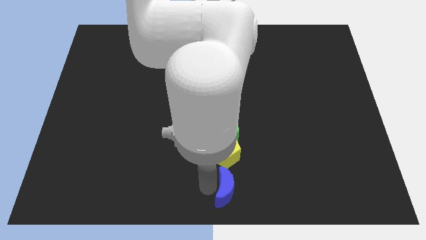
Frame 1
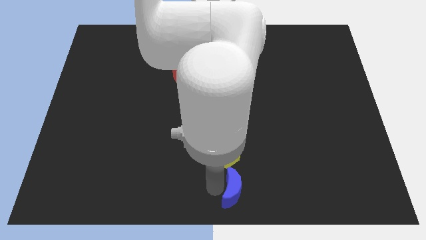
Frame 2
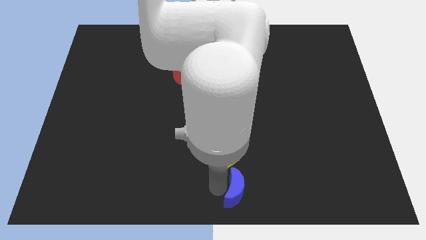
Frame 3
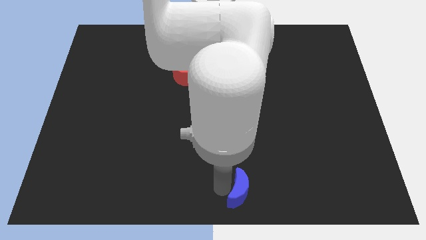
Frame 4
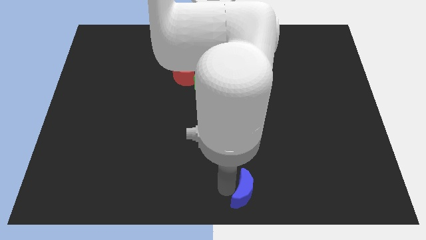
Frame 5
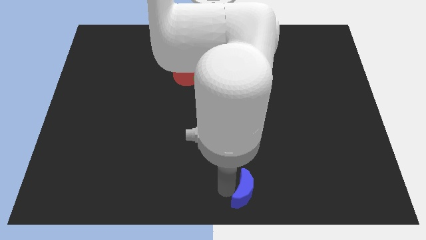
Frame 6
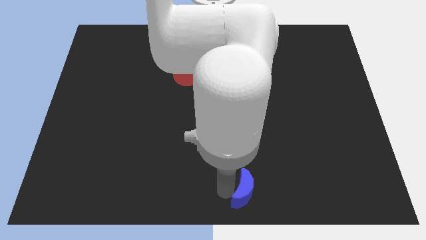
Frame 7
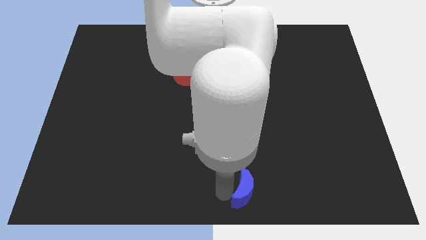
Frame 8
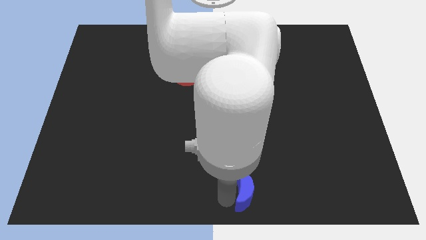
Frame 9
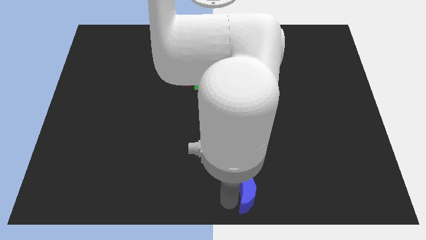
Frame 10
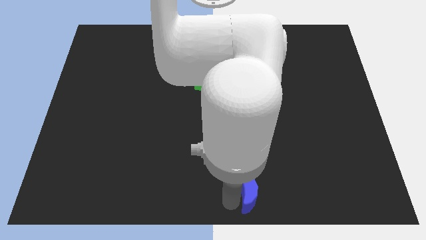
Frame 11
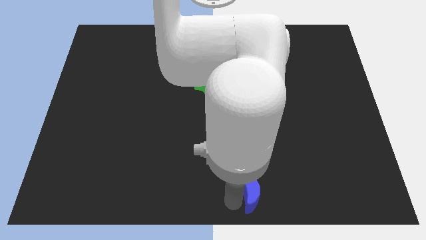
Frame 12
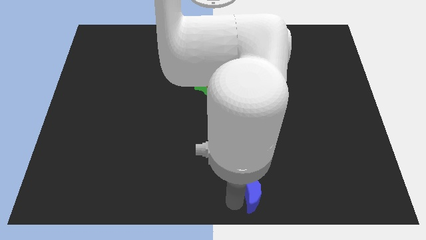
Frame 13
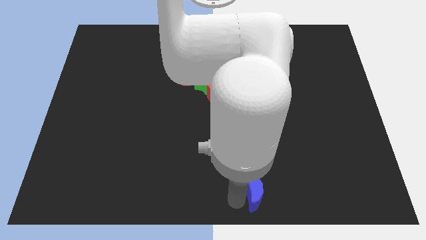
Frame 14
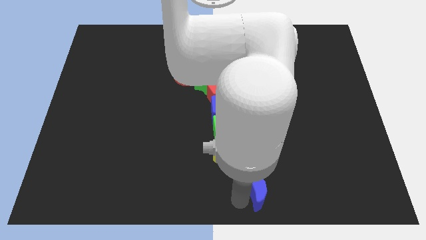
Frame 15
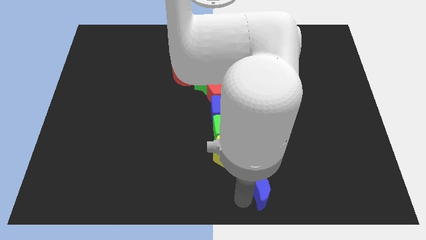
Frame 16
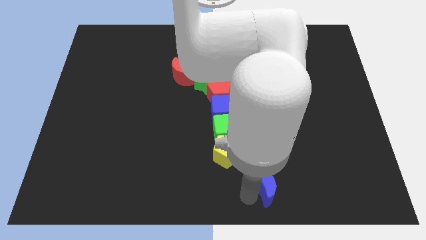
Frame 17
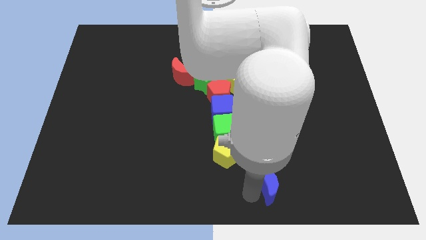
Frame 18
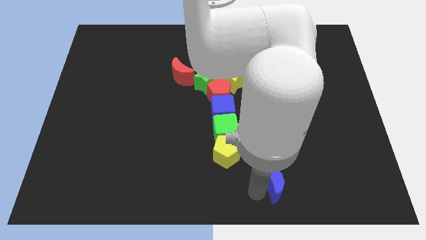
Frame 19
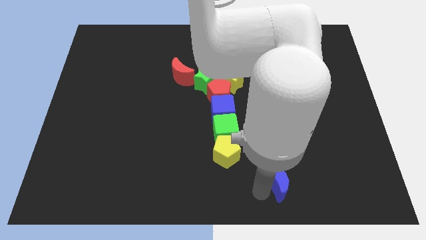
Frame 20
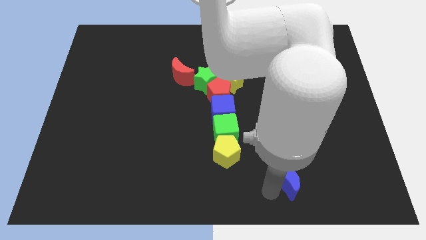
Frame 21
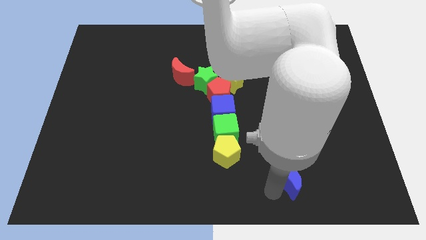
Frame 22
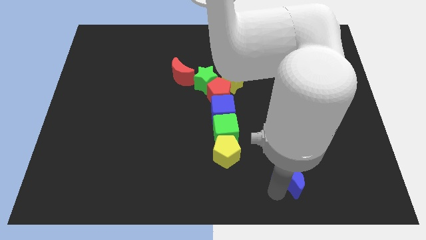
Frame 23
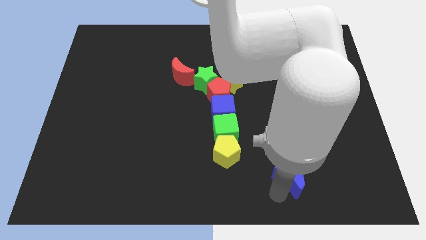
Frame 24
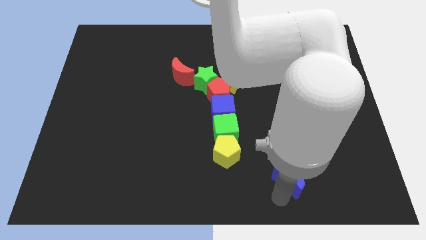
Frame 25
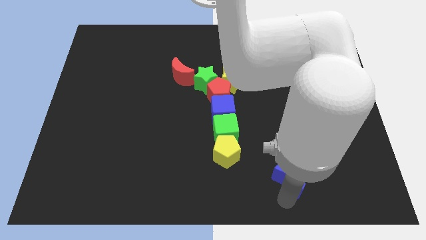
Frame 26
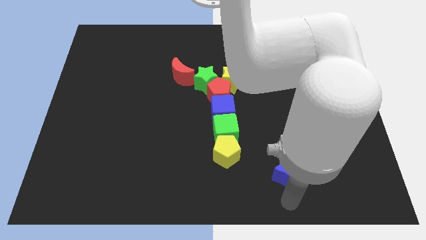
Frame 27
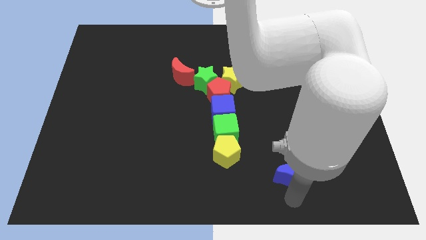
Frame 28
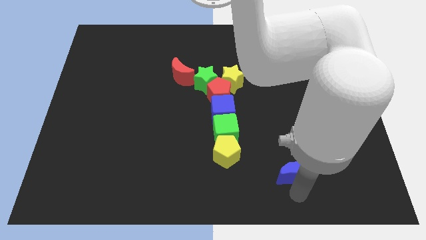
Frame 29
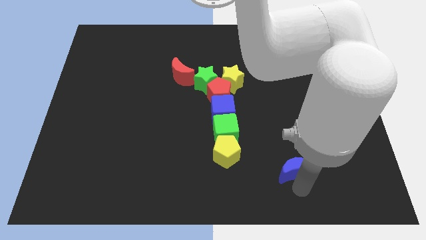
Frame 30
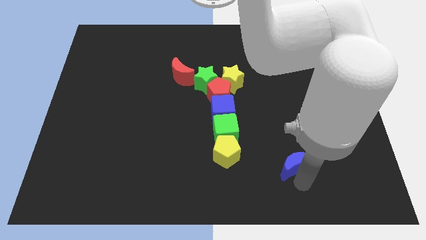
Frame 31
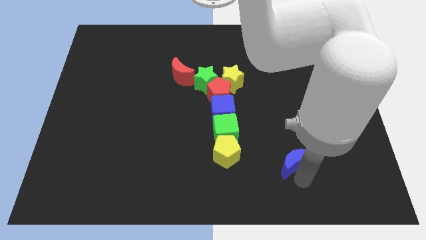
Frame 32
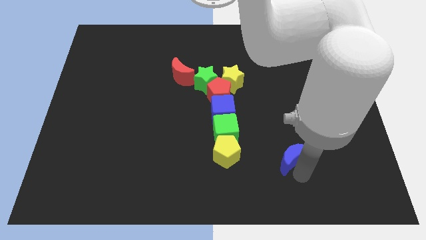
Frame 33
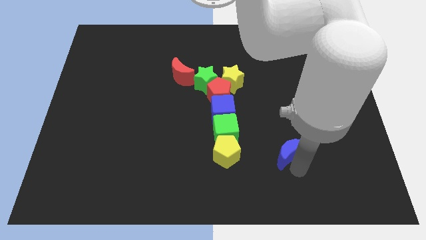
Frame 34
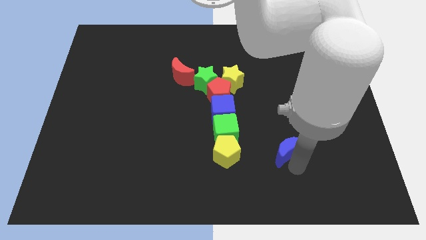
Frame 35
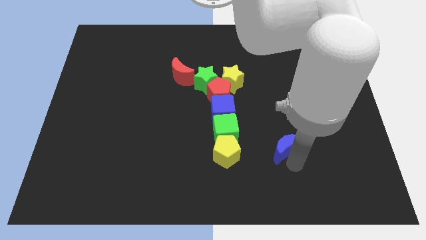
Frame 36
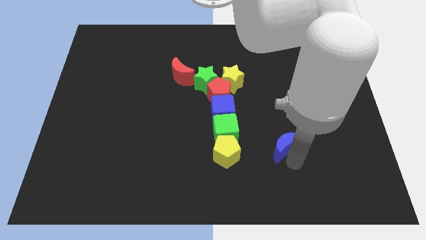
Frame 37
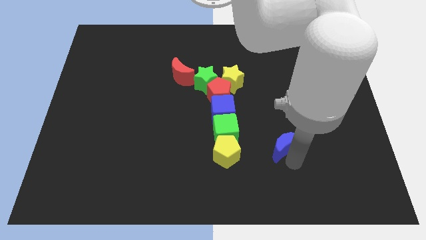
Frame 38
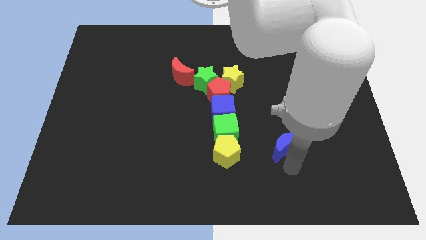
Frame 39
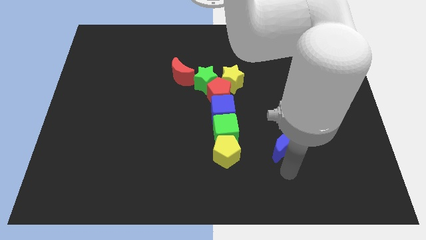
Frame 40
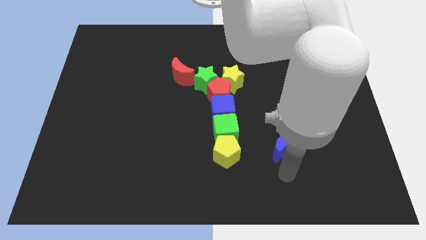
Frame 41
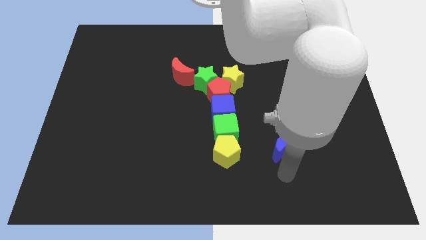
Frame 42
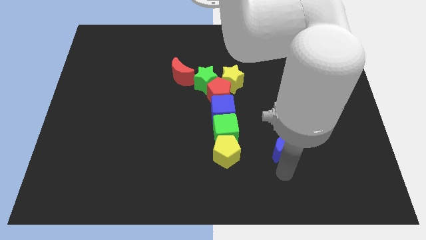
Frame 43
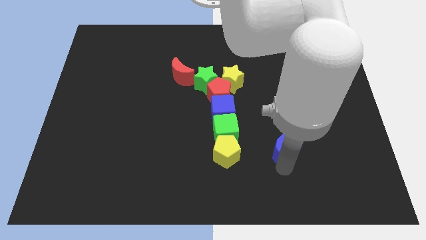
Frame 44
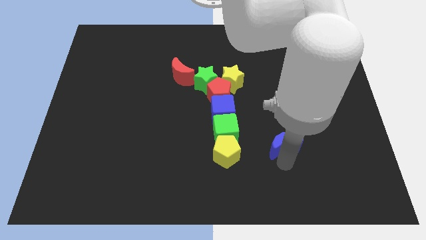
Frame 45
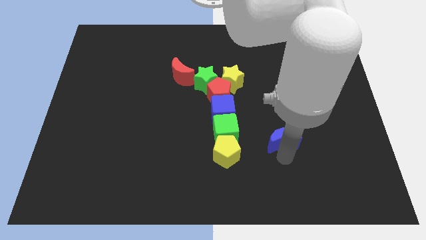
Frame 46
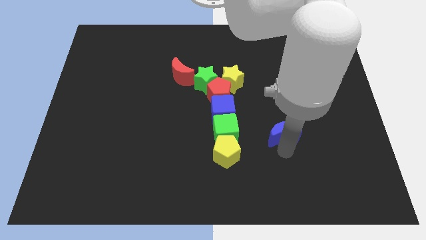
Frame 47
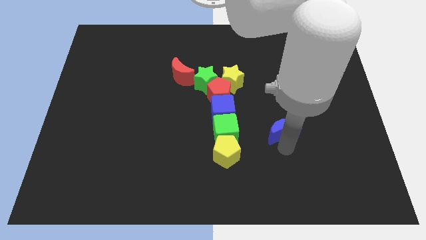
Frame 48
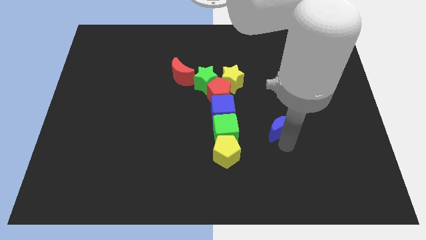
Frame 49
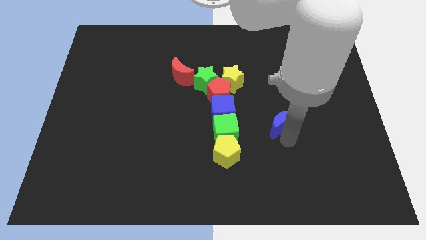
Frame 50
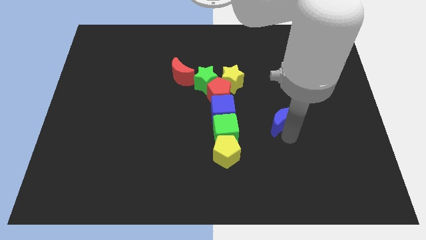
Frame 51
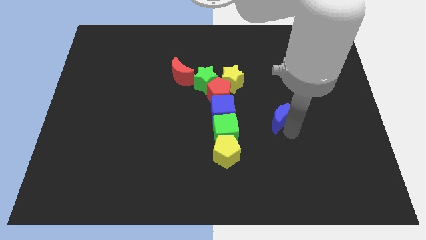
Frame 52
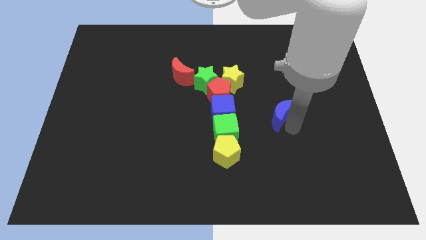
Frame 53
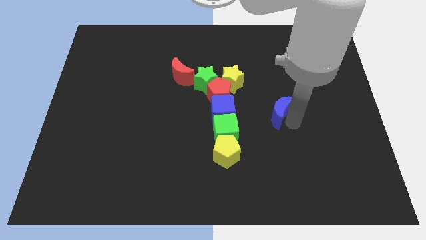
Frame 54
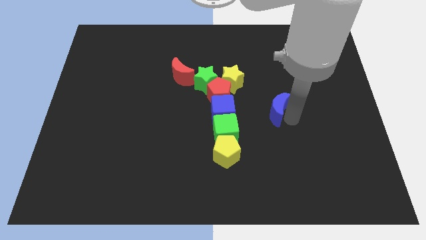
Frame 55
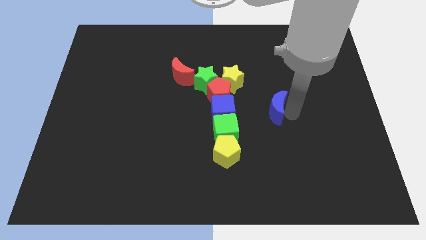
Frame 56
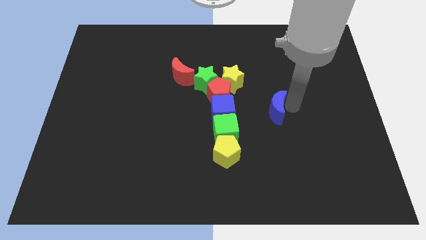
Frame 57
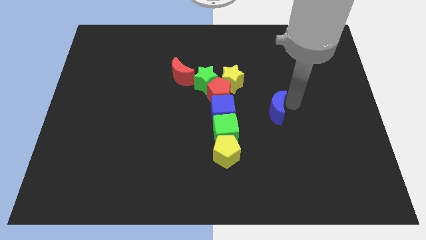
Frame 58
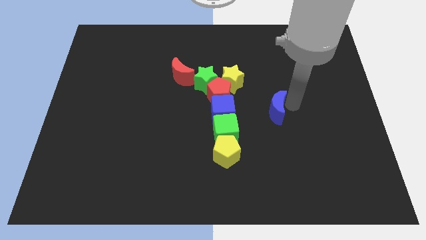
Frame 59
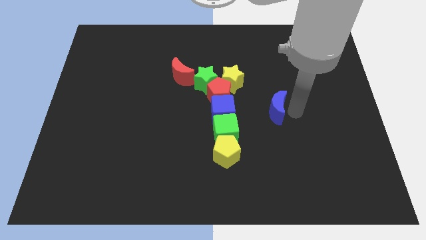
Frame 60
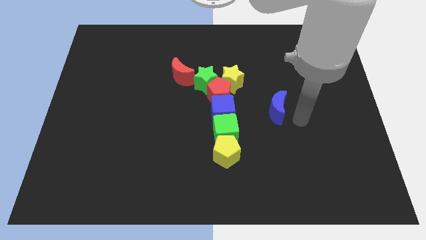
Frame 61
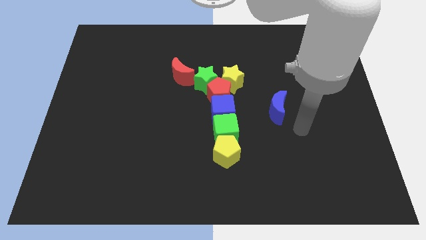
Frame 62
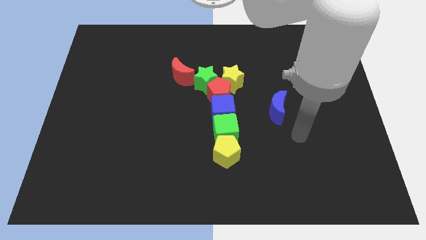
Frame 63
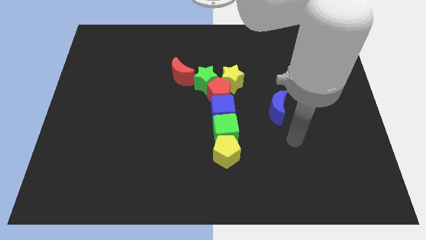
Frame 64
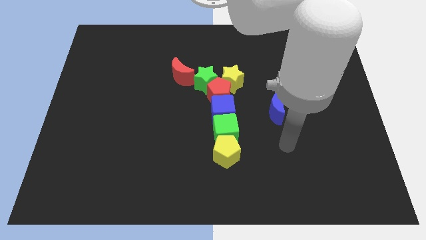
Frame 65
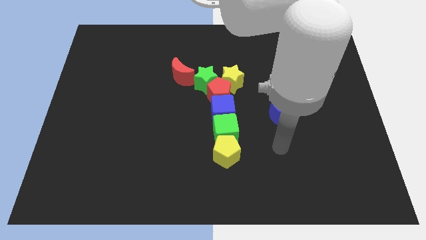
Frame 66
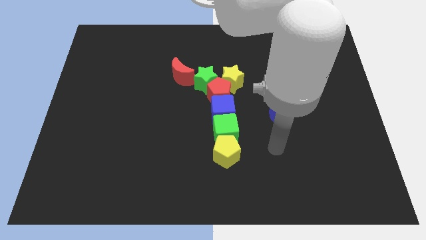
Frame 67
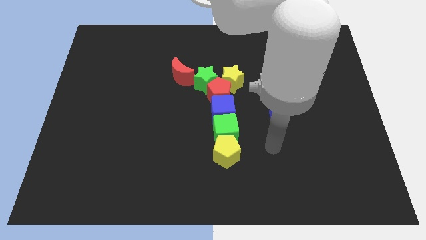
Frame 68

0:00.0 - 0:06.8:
move the blue semicircle to the right side of the blue cube

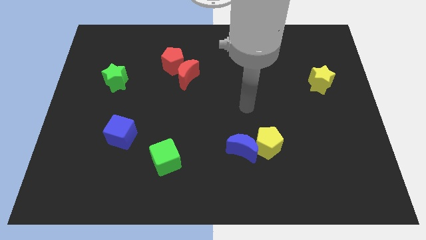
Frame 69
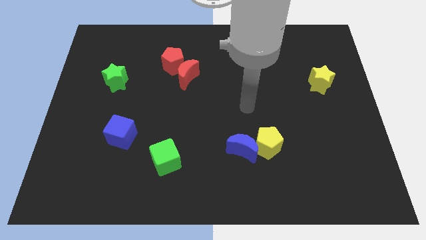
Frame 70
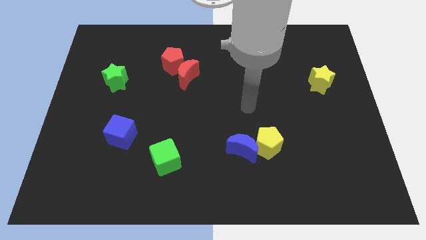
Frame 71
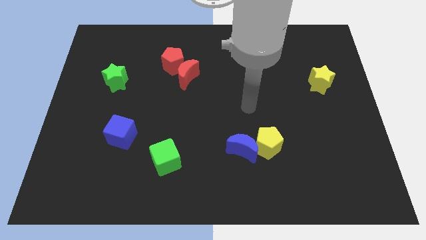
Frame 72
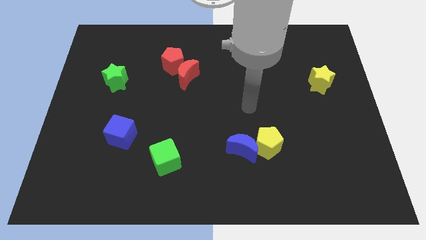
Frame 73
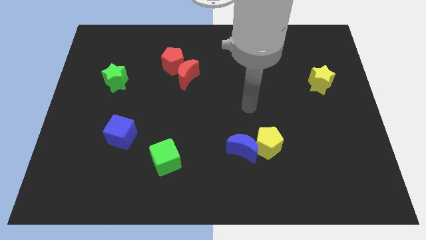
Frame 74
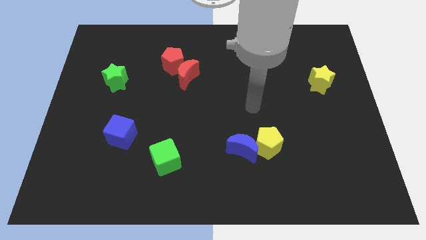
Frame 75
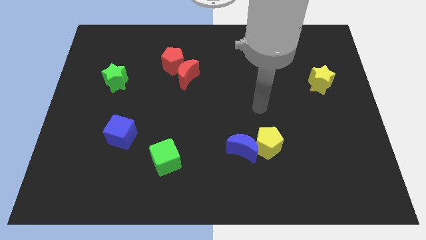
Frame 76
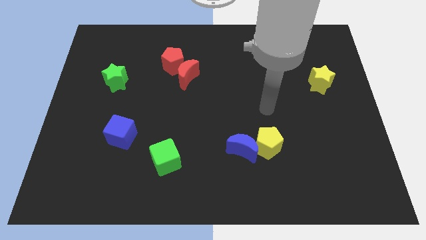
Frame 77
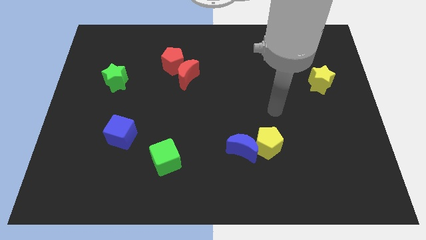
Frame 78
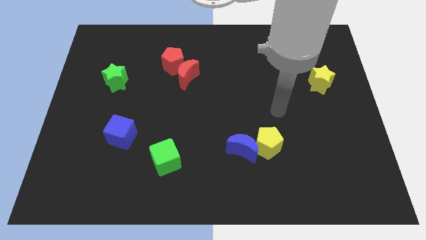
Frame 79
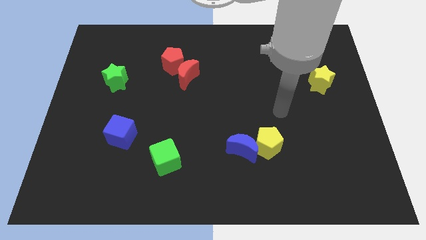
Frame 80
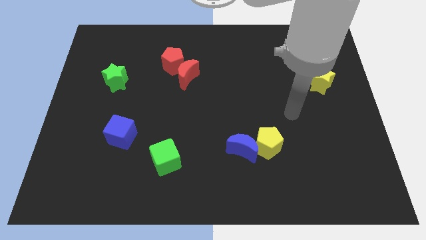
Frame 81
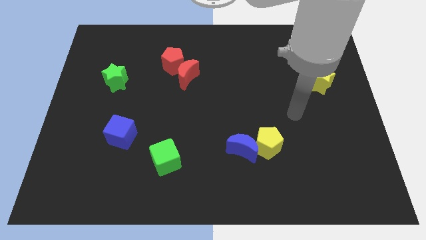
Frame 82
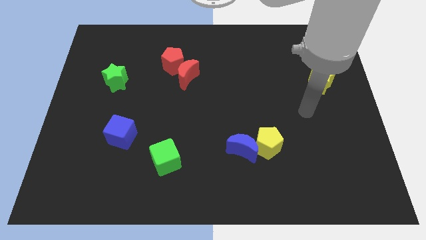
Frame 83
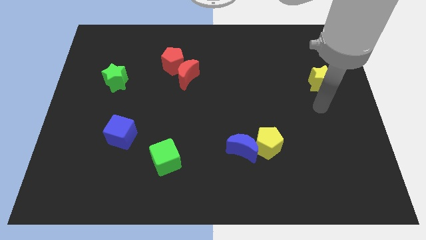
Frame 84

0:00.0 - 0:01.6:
move your arm to the bottom side of the yellow star

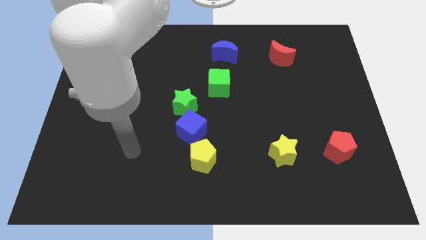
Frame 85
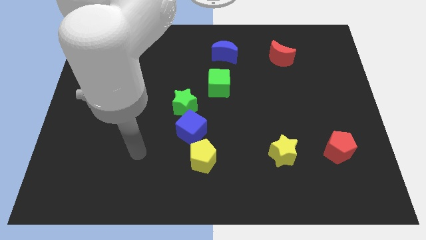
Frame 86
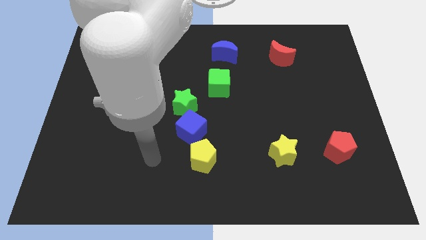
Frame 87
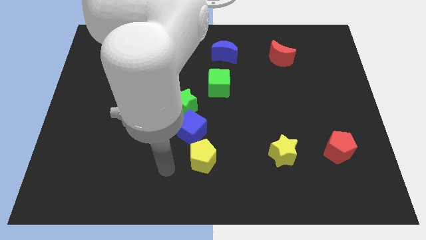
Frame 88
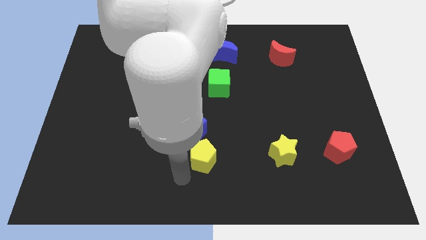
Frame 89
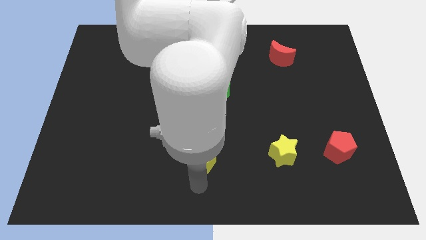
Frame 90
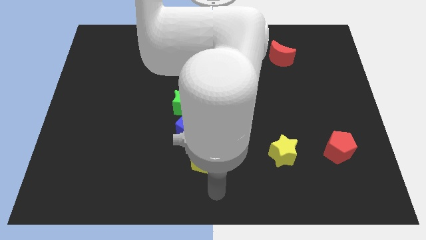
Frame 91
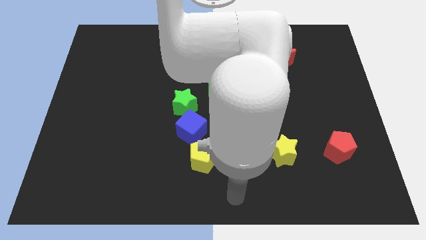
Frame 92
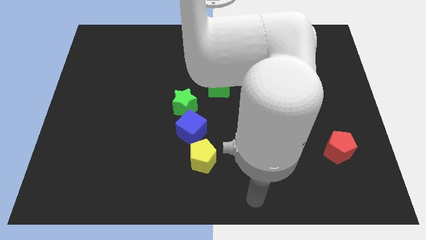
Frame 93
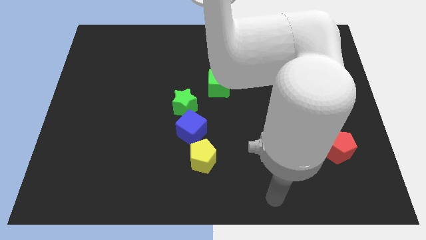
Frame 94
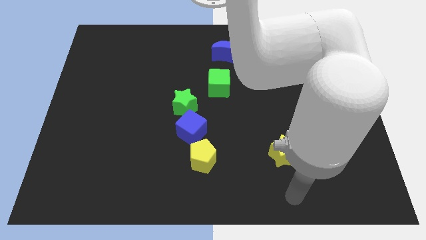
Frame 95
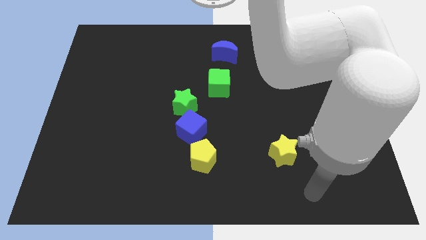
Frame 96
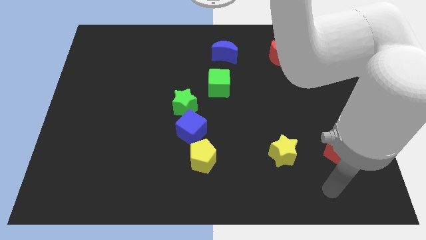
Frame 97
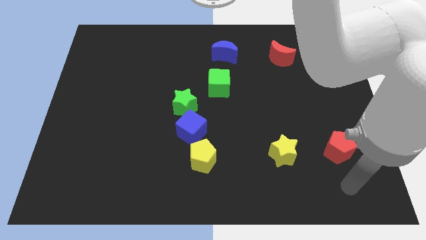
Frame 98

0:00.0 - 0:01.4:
move the arm close to the red pentagon
